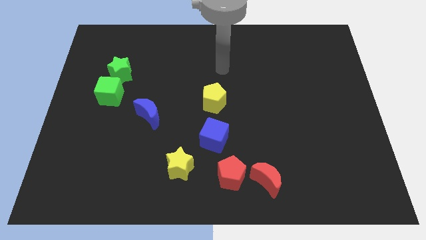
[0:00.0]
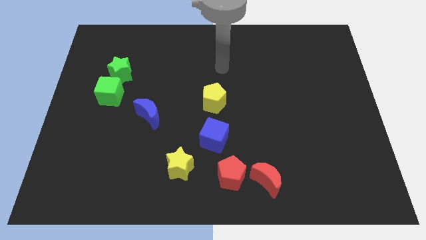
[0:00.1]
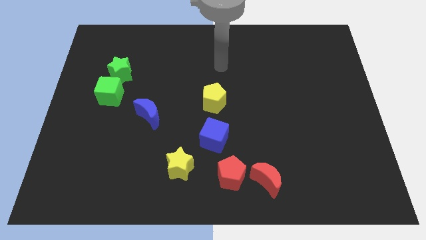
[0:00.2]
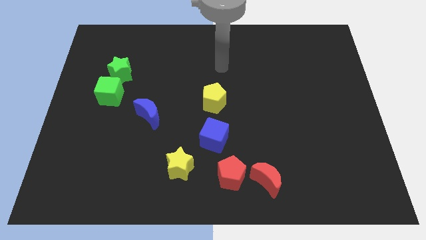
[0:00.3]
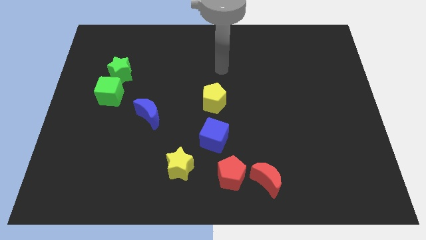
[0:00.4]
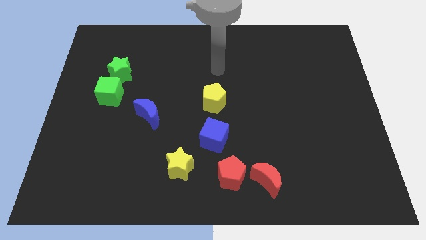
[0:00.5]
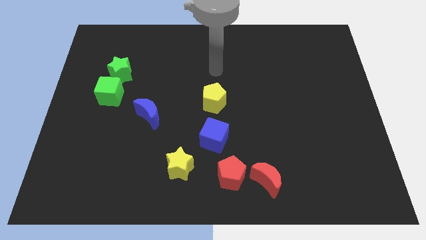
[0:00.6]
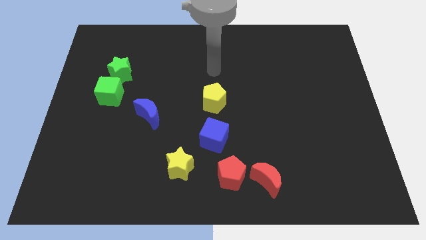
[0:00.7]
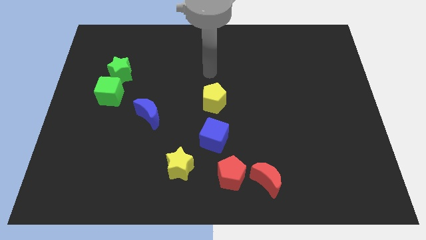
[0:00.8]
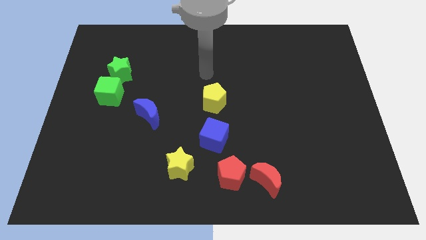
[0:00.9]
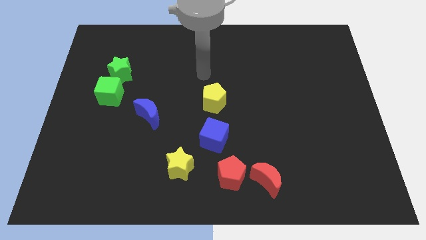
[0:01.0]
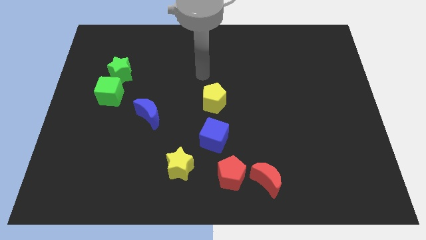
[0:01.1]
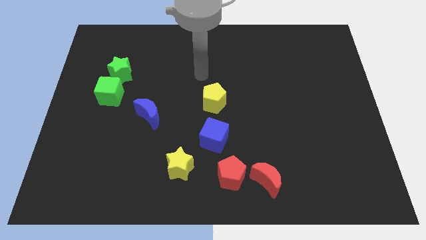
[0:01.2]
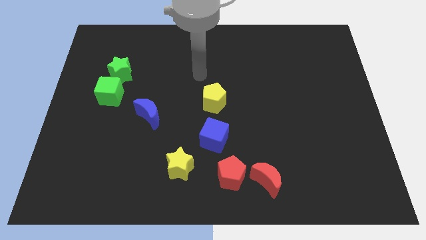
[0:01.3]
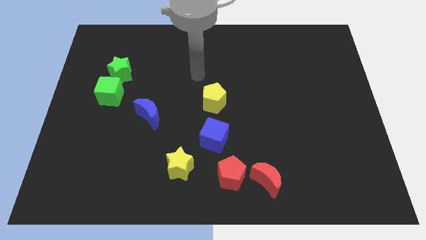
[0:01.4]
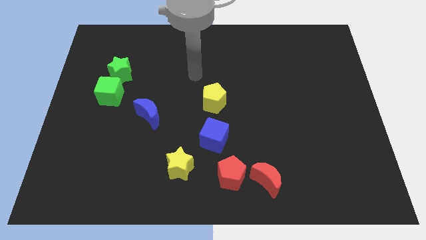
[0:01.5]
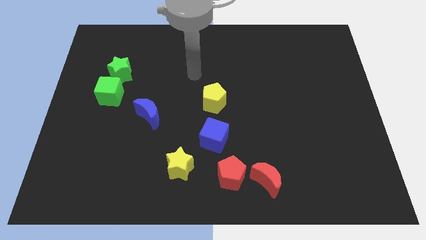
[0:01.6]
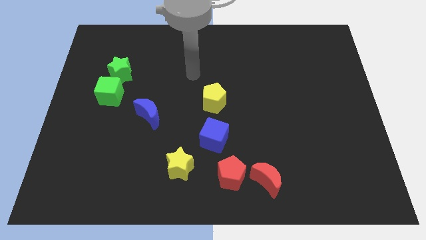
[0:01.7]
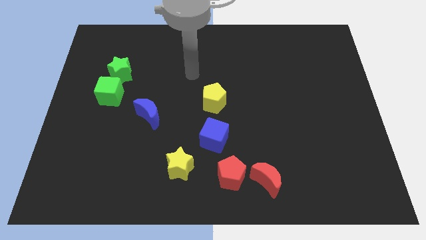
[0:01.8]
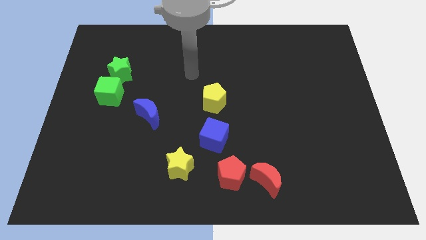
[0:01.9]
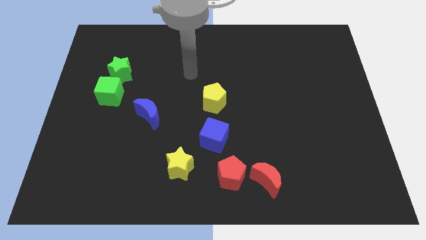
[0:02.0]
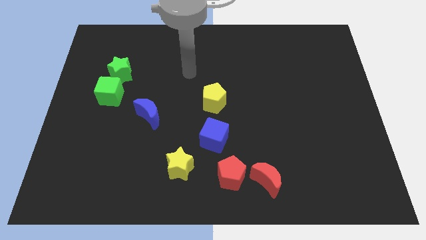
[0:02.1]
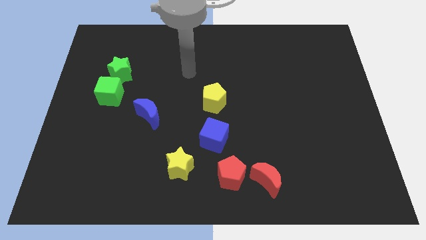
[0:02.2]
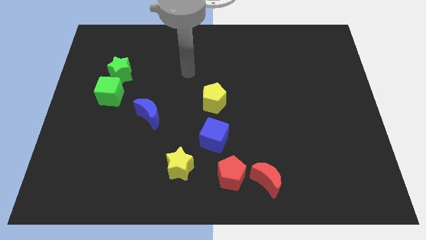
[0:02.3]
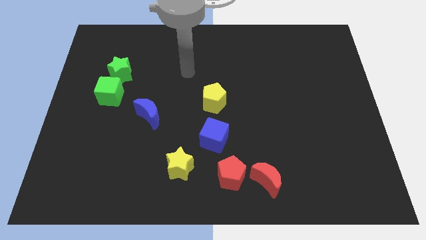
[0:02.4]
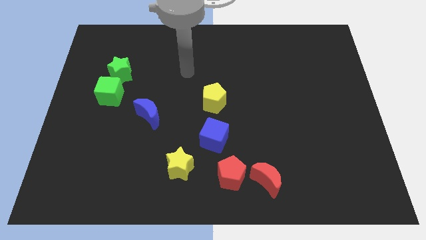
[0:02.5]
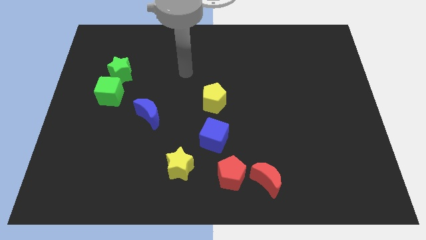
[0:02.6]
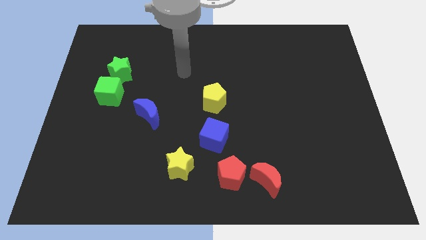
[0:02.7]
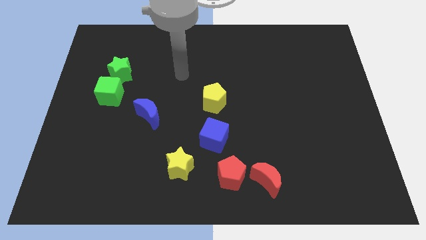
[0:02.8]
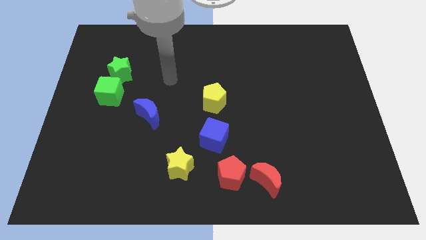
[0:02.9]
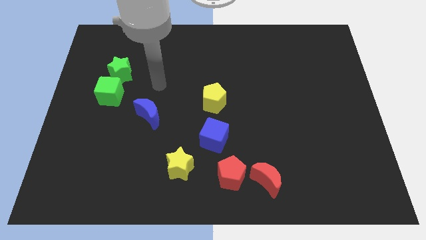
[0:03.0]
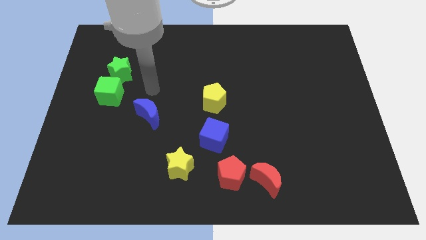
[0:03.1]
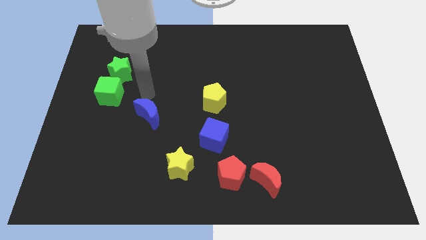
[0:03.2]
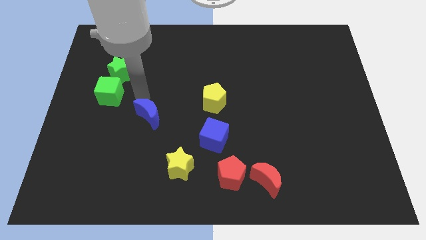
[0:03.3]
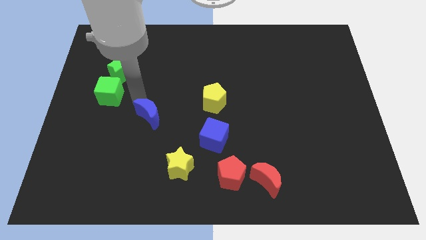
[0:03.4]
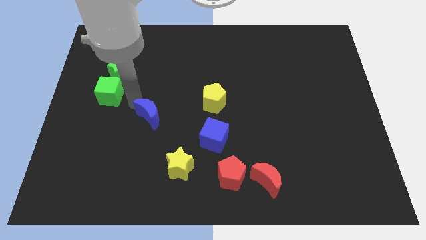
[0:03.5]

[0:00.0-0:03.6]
move the arm to the green cube

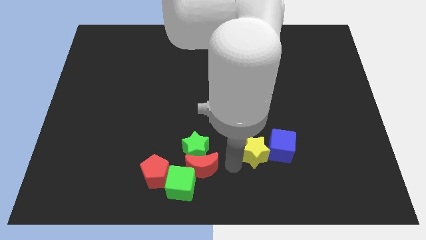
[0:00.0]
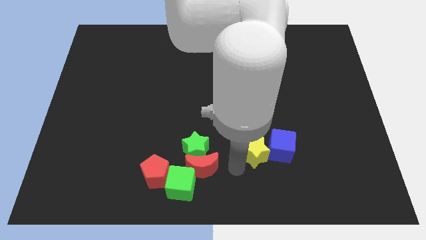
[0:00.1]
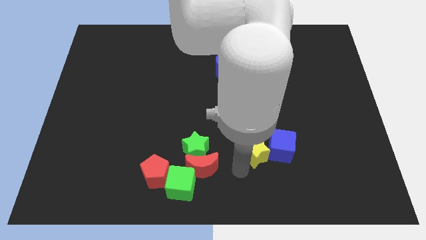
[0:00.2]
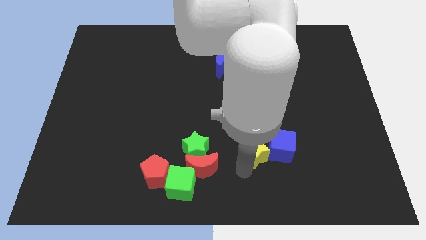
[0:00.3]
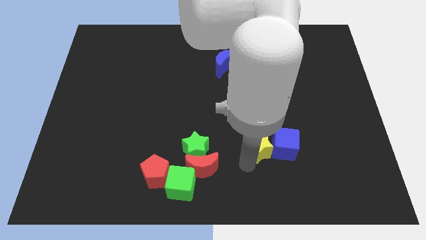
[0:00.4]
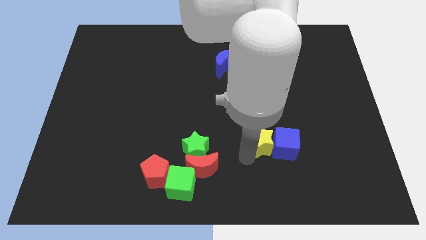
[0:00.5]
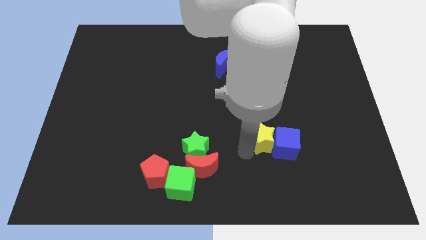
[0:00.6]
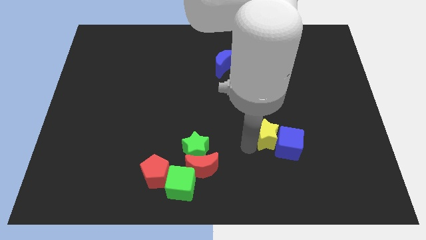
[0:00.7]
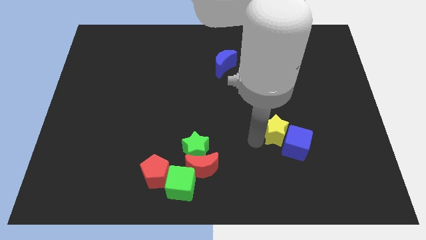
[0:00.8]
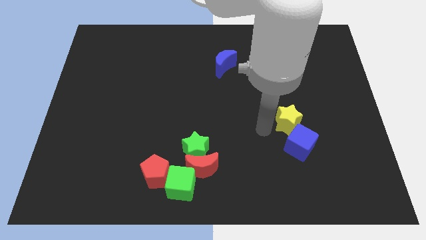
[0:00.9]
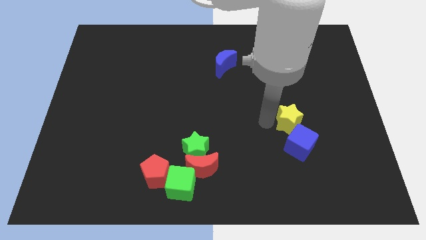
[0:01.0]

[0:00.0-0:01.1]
slide the yellow star to the top of the blue cube

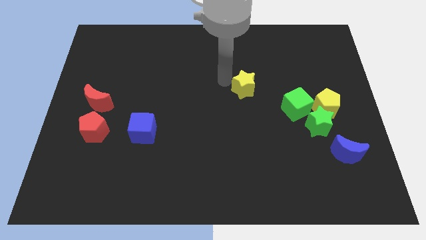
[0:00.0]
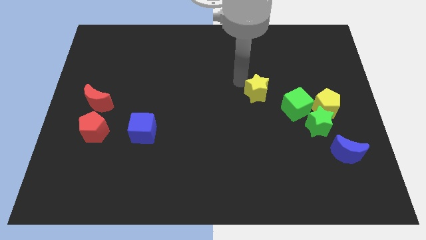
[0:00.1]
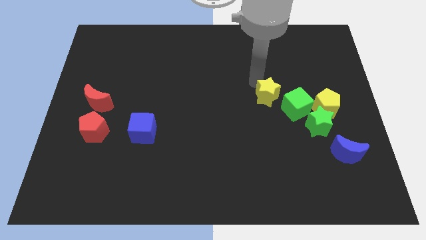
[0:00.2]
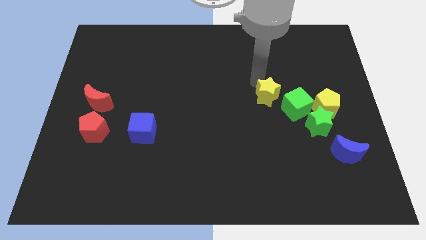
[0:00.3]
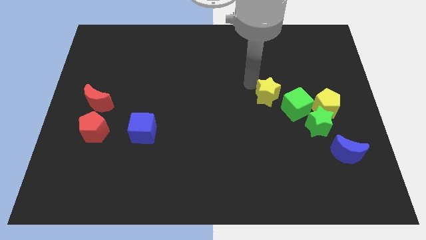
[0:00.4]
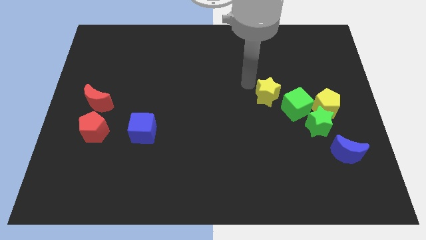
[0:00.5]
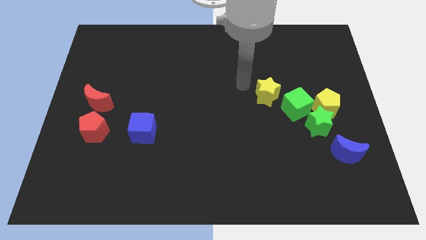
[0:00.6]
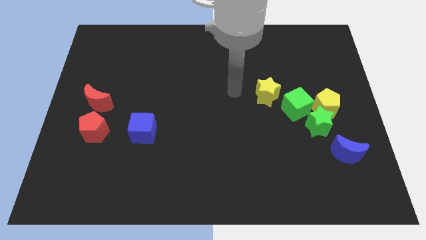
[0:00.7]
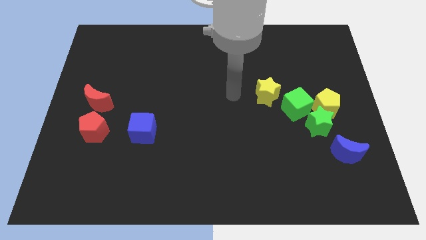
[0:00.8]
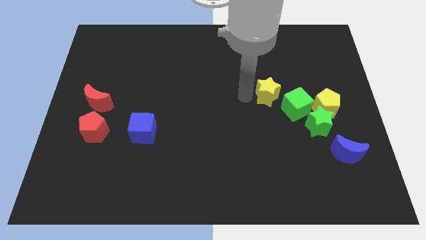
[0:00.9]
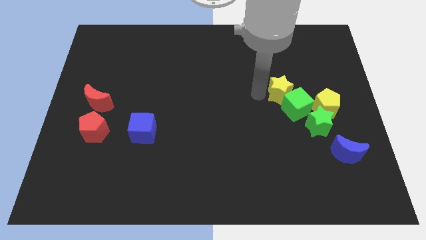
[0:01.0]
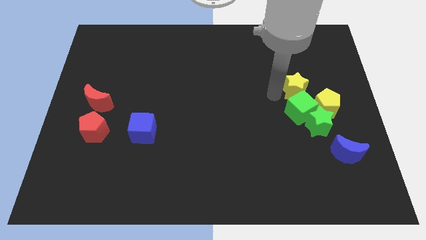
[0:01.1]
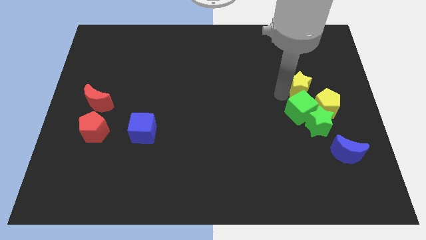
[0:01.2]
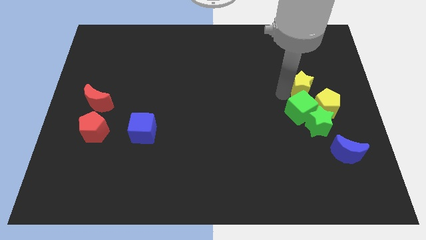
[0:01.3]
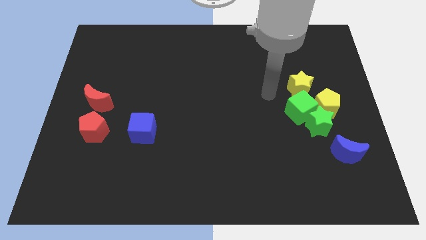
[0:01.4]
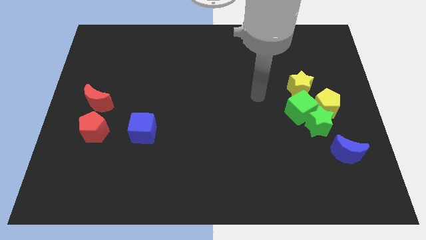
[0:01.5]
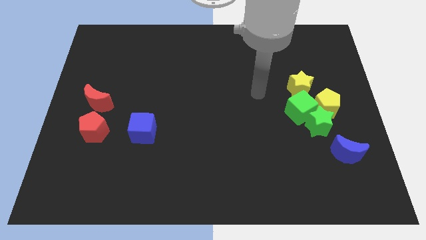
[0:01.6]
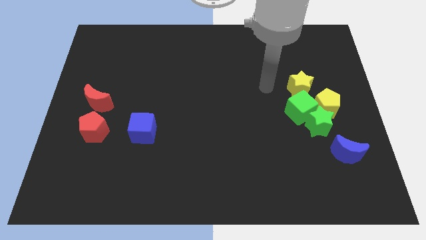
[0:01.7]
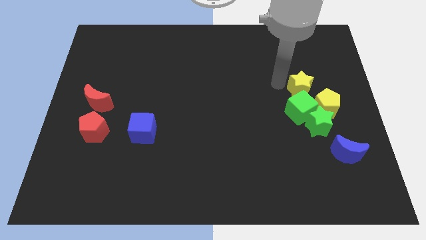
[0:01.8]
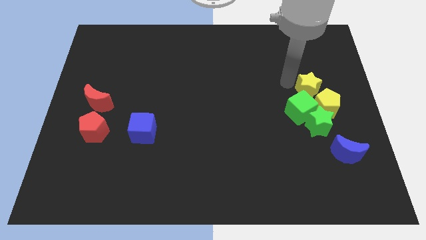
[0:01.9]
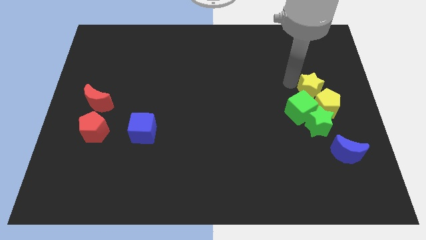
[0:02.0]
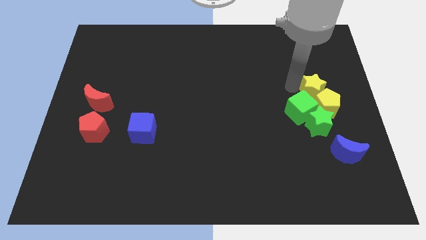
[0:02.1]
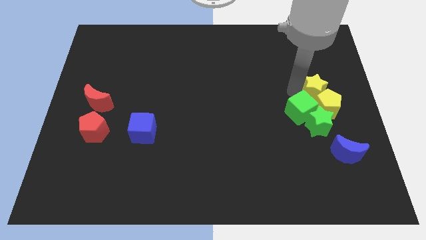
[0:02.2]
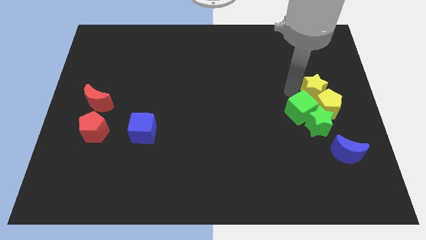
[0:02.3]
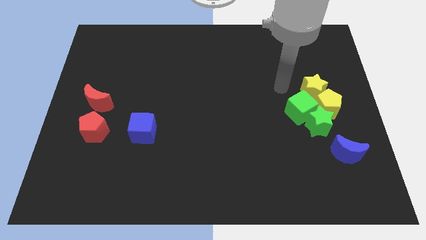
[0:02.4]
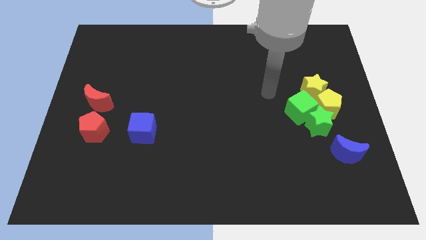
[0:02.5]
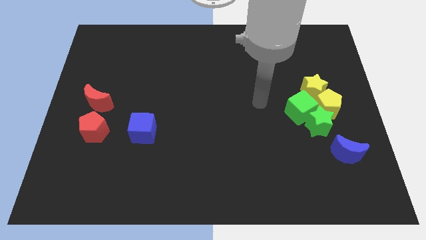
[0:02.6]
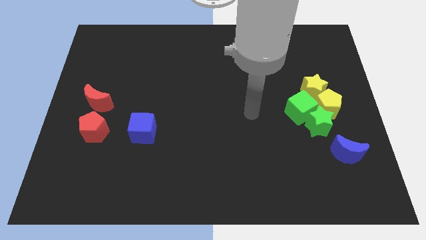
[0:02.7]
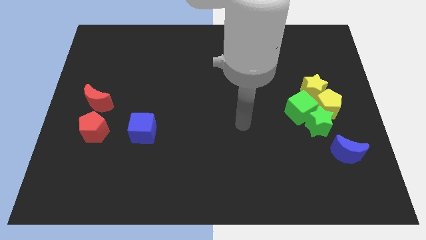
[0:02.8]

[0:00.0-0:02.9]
move yellow star diagonally above yellow pentagon

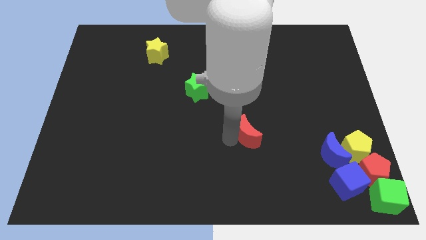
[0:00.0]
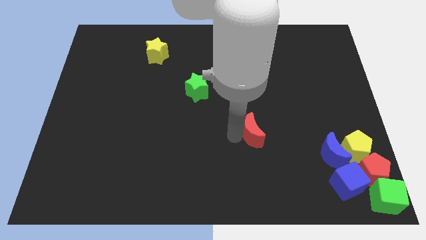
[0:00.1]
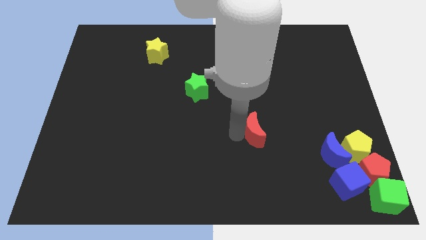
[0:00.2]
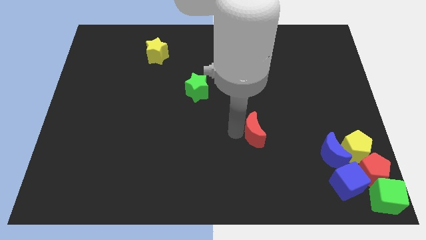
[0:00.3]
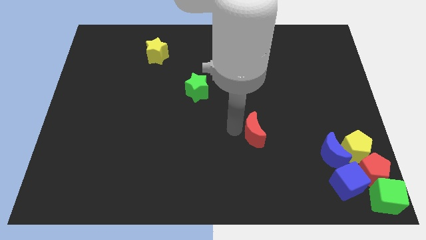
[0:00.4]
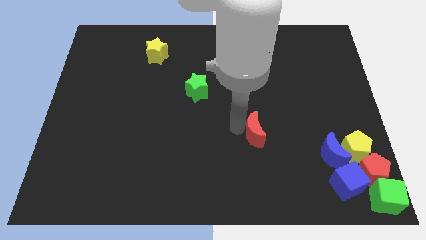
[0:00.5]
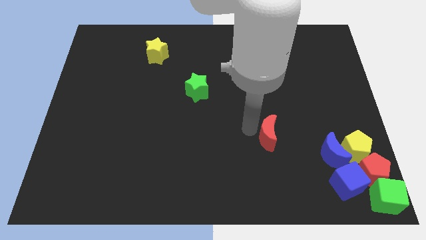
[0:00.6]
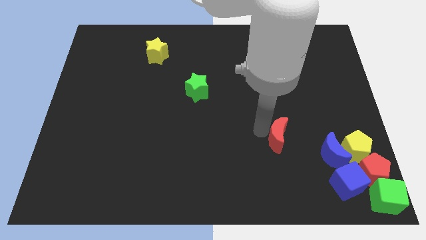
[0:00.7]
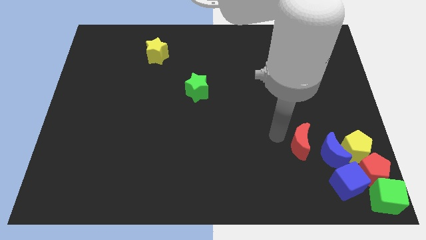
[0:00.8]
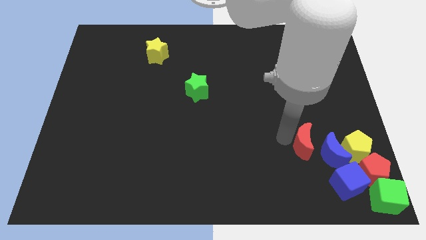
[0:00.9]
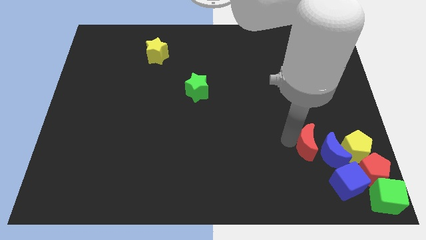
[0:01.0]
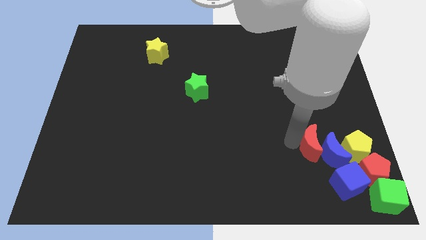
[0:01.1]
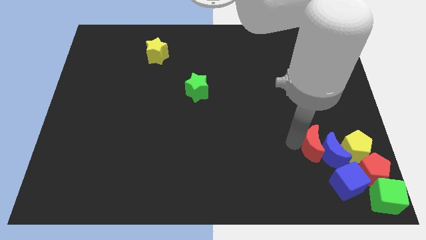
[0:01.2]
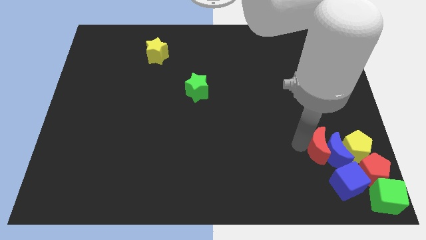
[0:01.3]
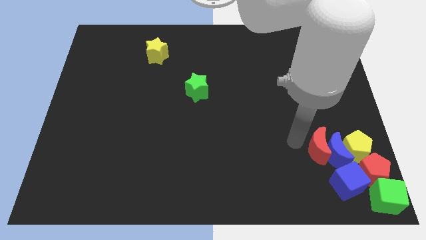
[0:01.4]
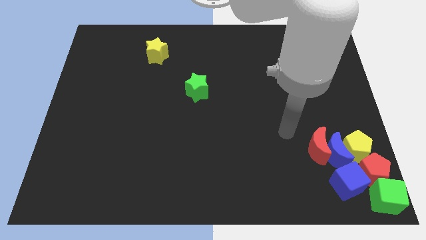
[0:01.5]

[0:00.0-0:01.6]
move the red crescent to the left of the blue crescent
